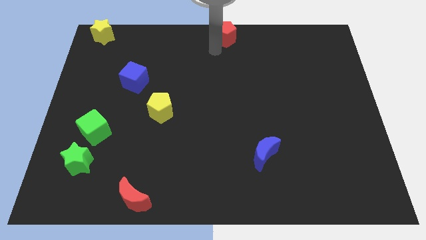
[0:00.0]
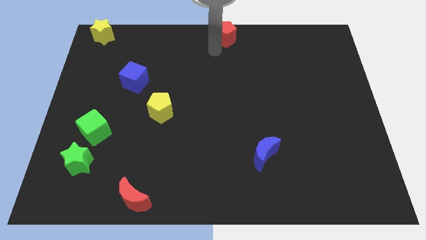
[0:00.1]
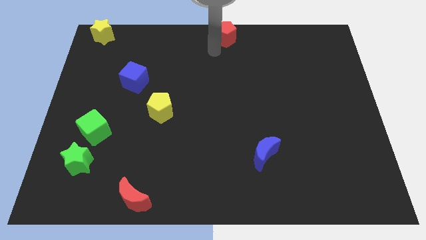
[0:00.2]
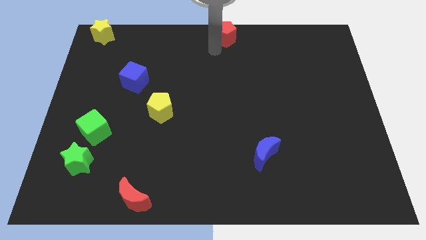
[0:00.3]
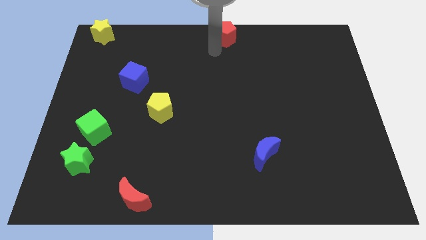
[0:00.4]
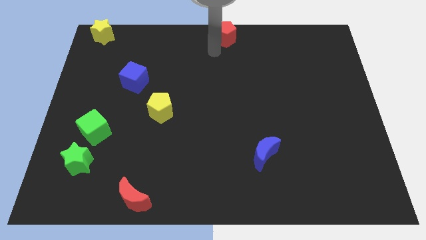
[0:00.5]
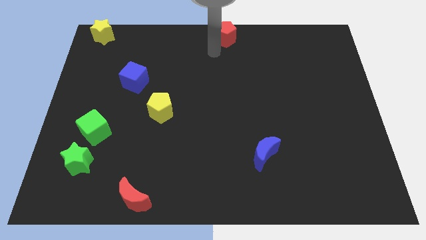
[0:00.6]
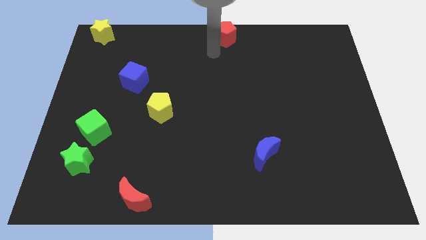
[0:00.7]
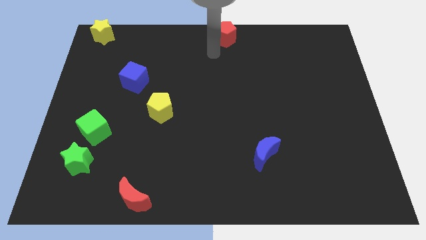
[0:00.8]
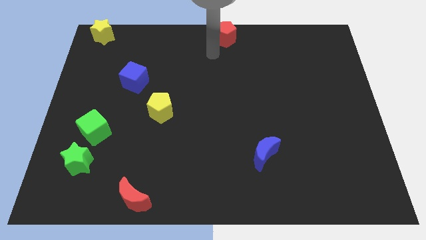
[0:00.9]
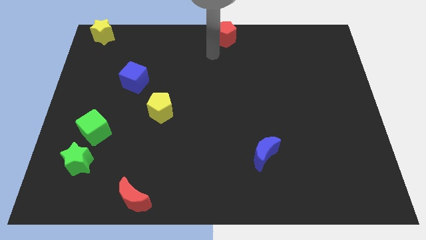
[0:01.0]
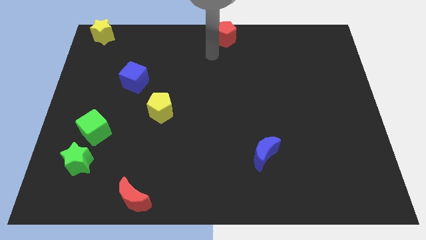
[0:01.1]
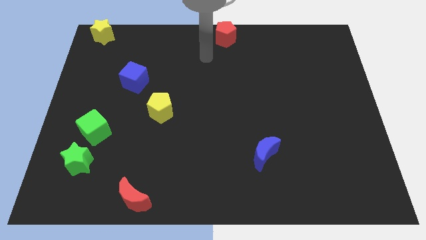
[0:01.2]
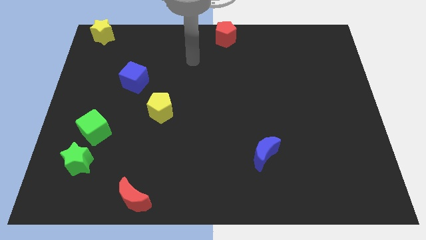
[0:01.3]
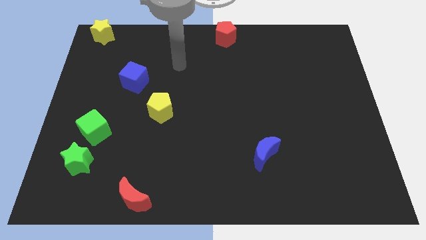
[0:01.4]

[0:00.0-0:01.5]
move the arm away from the red pentagon

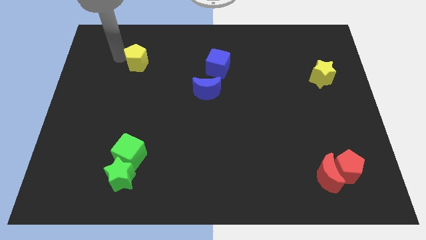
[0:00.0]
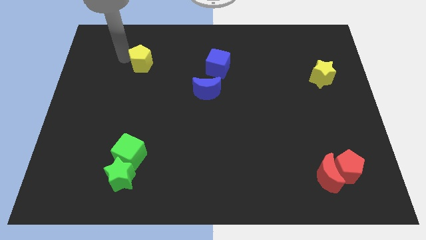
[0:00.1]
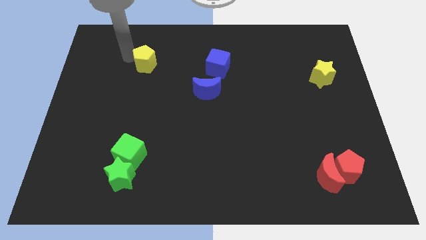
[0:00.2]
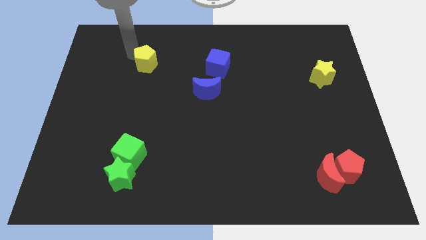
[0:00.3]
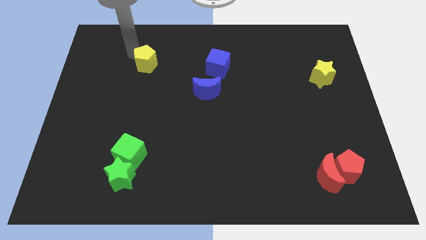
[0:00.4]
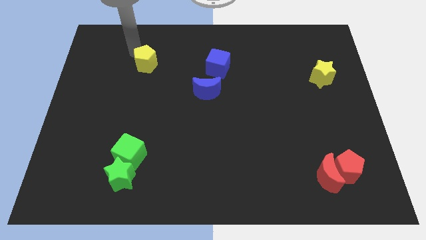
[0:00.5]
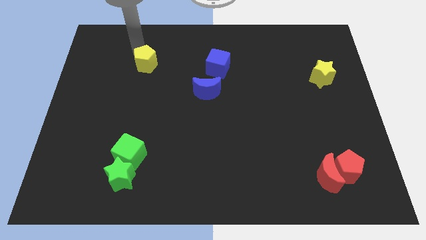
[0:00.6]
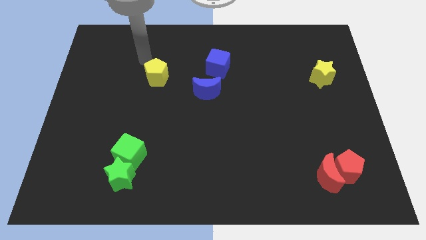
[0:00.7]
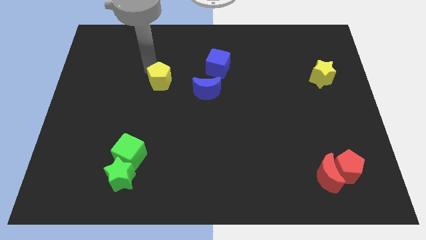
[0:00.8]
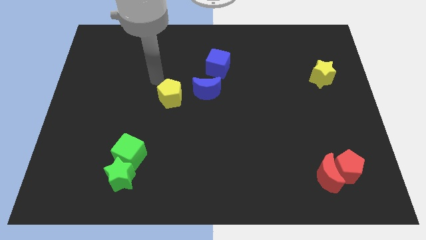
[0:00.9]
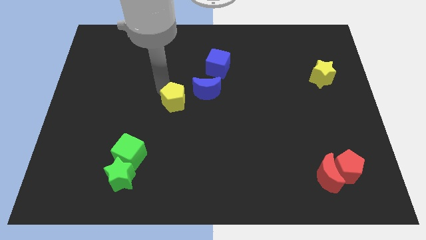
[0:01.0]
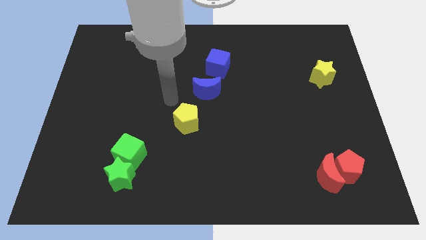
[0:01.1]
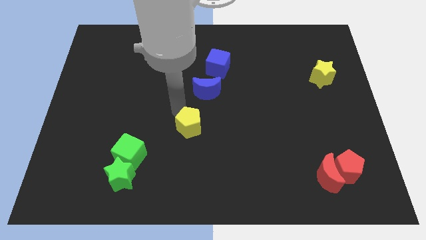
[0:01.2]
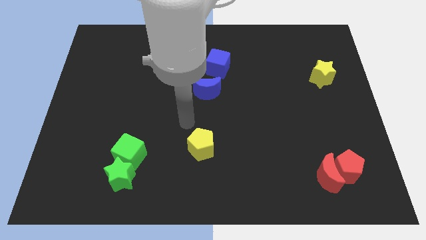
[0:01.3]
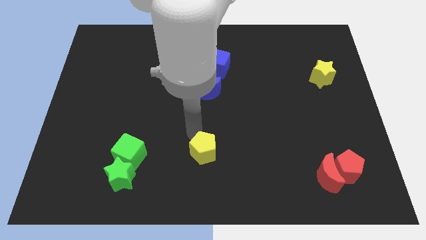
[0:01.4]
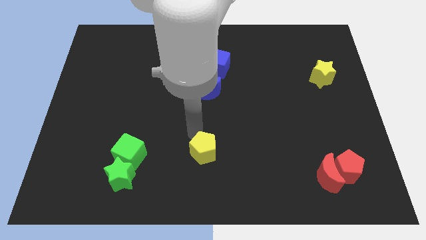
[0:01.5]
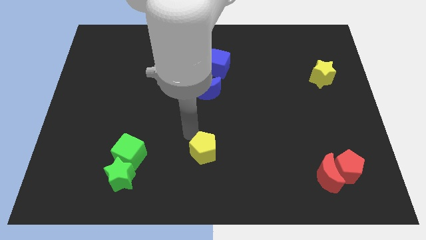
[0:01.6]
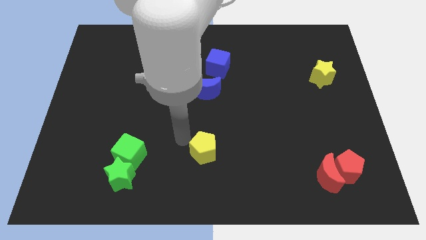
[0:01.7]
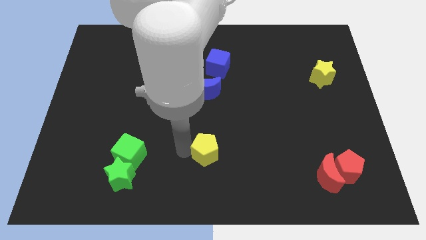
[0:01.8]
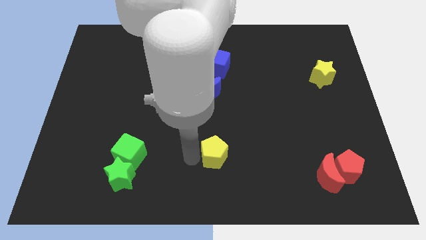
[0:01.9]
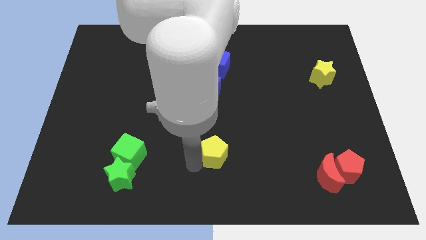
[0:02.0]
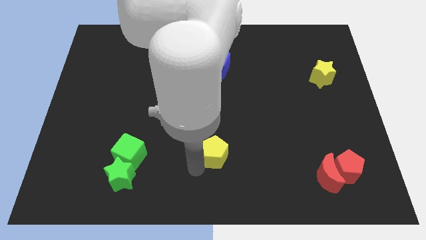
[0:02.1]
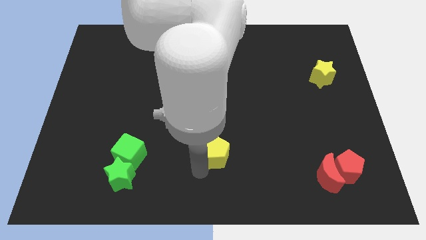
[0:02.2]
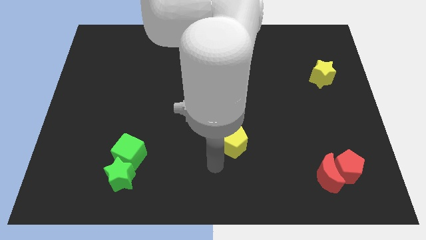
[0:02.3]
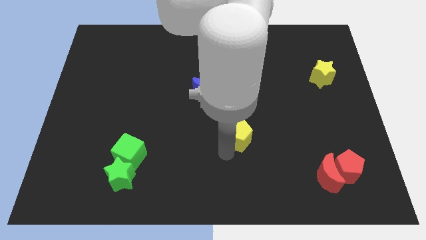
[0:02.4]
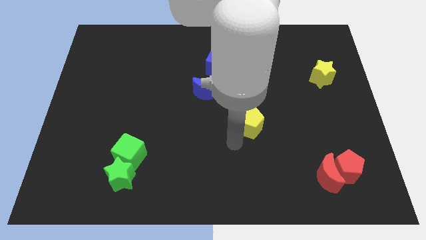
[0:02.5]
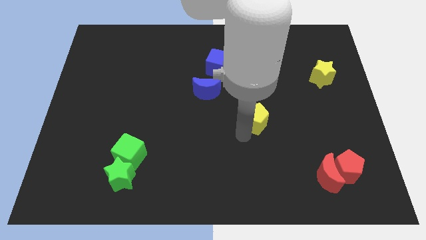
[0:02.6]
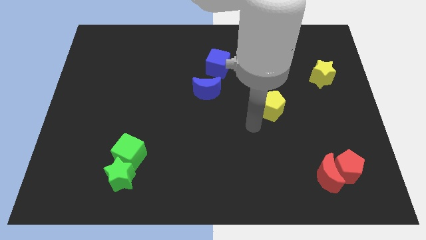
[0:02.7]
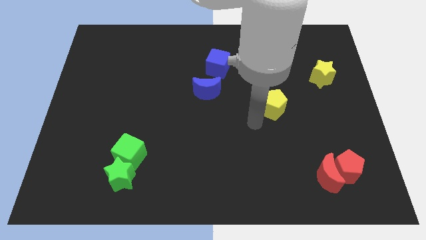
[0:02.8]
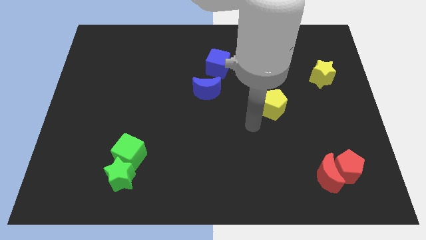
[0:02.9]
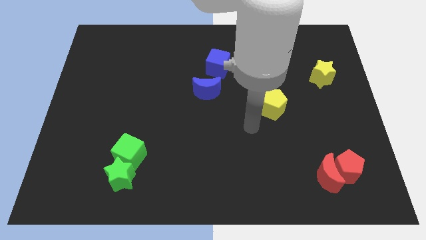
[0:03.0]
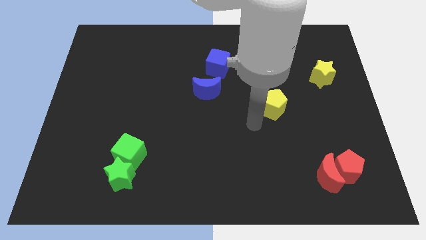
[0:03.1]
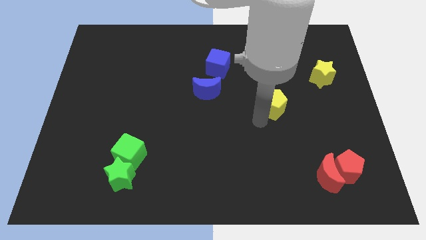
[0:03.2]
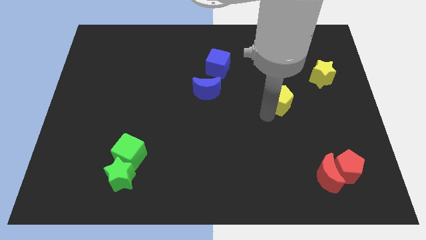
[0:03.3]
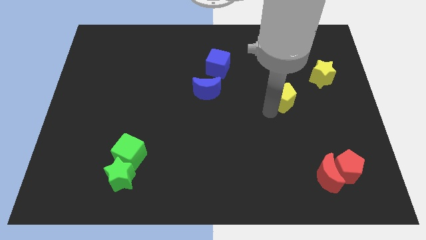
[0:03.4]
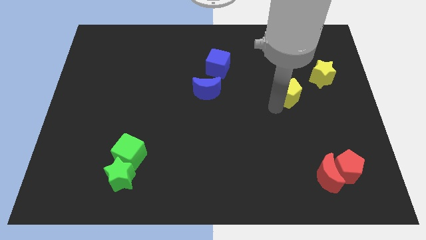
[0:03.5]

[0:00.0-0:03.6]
move yellow pentagon to the right of blue moon

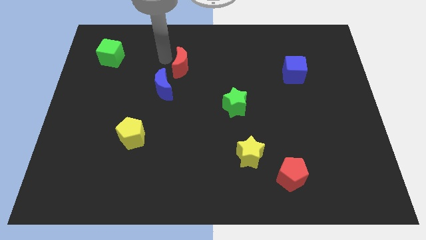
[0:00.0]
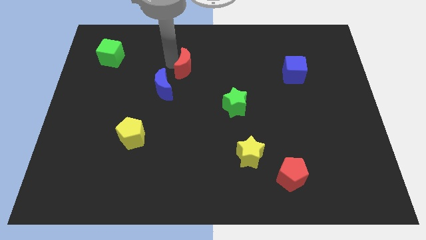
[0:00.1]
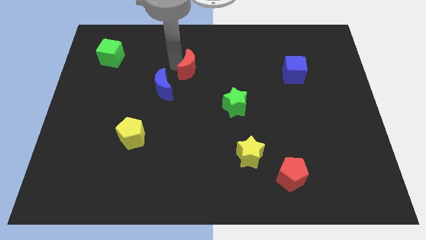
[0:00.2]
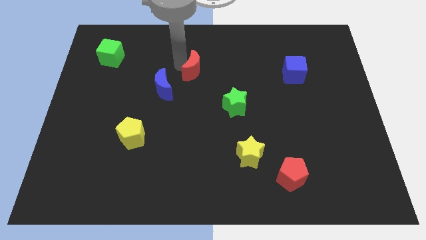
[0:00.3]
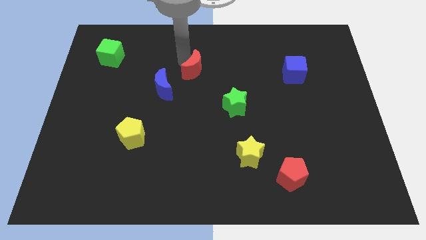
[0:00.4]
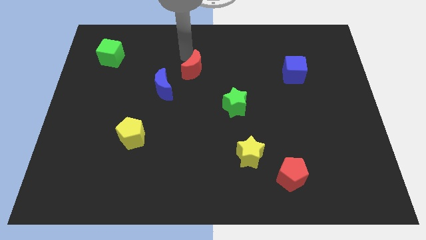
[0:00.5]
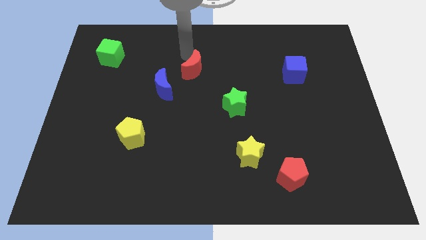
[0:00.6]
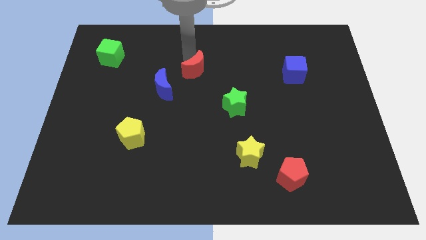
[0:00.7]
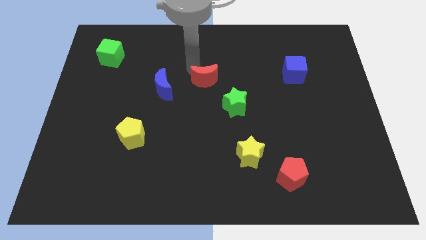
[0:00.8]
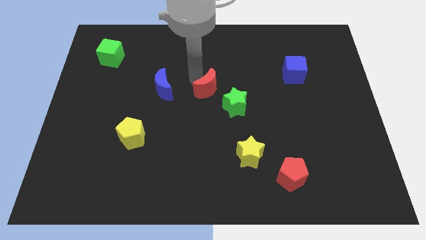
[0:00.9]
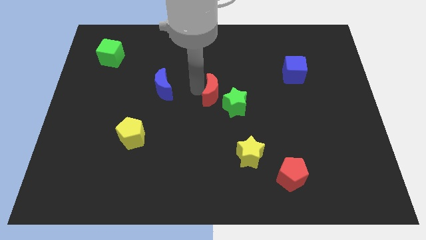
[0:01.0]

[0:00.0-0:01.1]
put the red moon parallel right to the blue moon

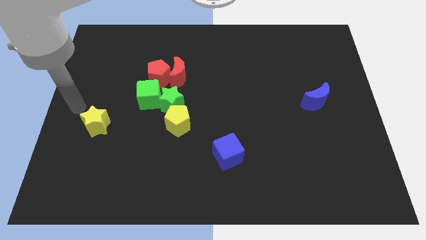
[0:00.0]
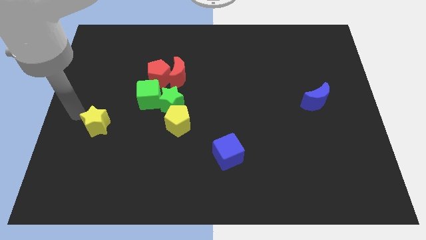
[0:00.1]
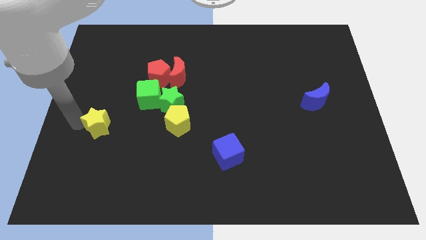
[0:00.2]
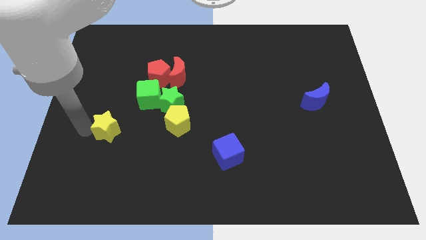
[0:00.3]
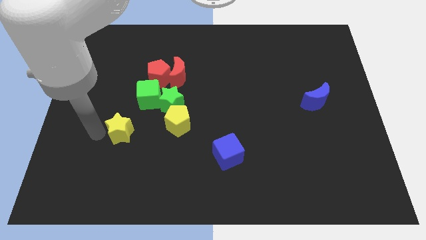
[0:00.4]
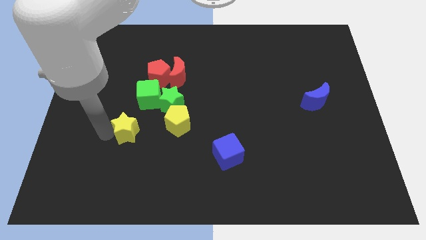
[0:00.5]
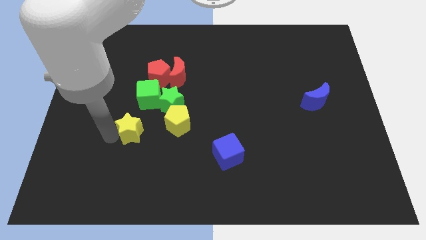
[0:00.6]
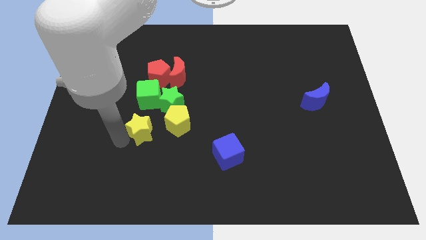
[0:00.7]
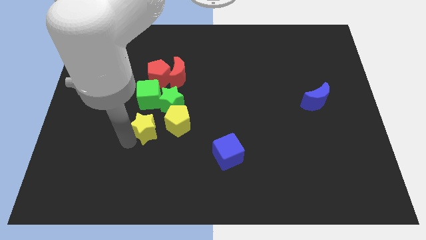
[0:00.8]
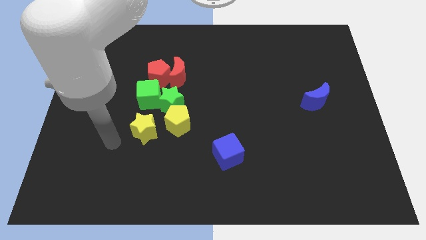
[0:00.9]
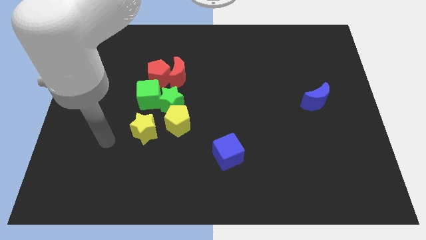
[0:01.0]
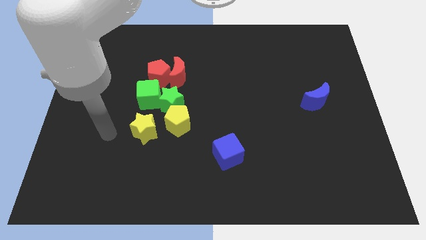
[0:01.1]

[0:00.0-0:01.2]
push yellow star to the bottom of green cube

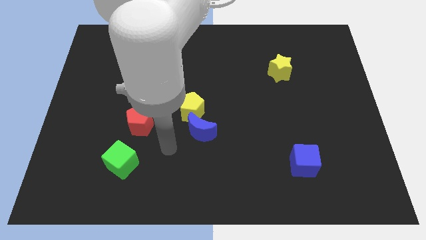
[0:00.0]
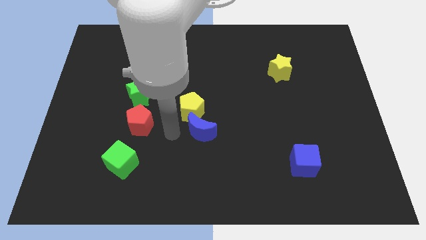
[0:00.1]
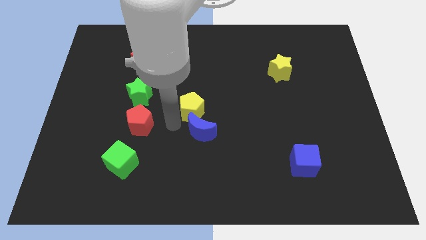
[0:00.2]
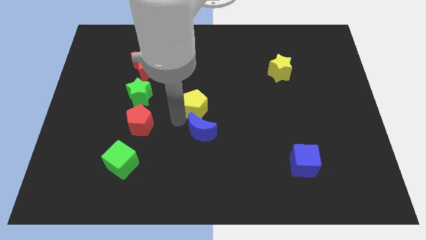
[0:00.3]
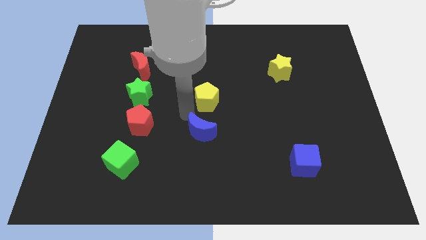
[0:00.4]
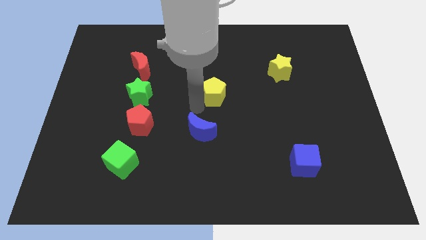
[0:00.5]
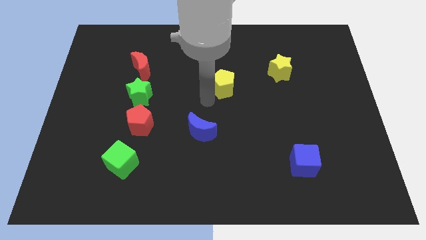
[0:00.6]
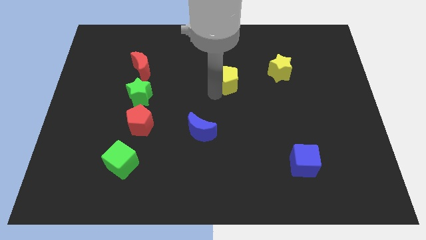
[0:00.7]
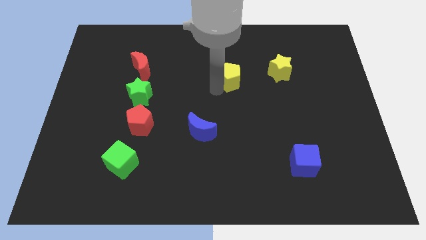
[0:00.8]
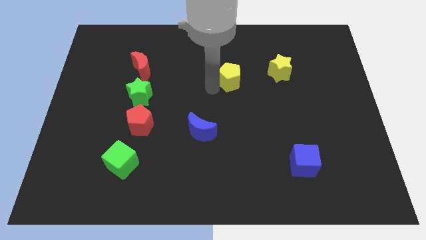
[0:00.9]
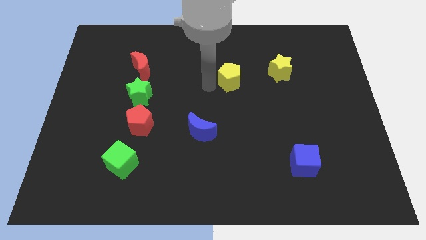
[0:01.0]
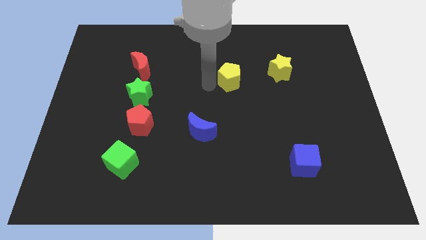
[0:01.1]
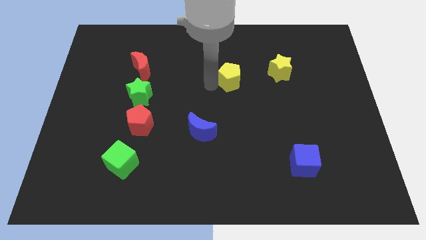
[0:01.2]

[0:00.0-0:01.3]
place yellow pentagon to the left of yellow star

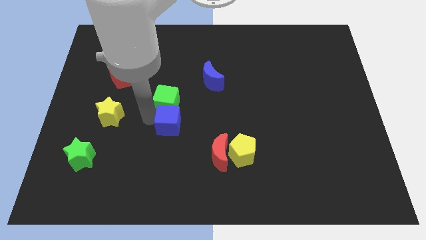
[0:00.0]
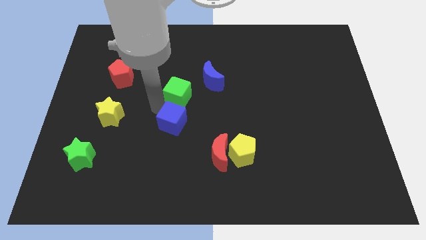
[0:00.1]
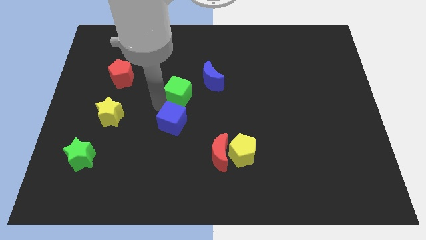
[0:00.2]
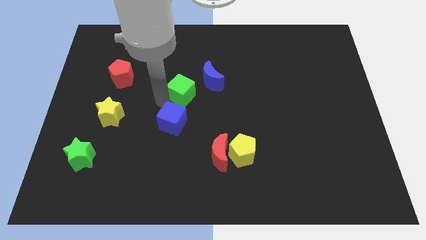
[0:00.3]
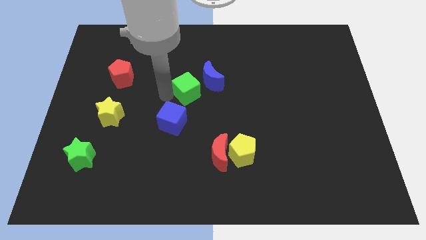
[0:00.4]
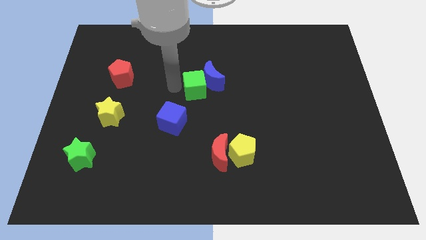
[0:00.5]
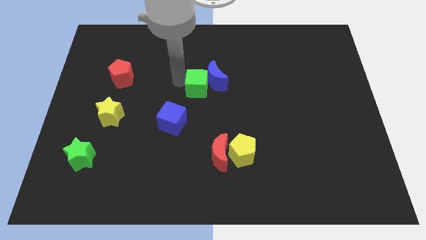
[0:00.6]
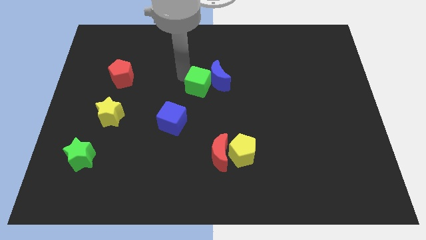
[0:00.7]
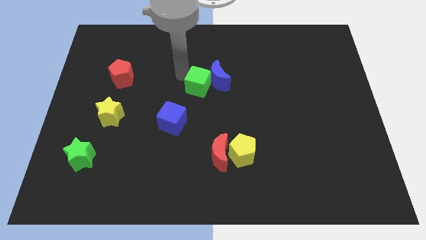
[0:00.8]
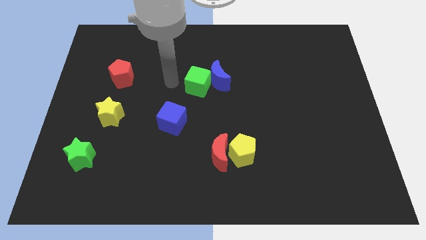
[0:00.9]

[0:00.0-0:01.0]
push the green cube into the blue crescent
